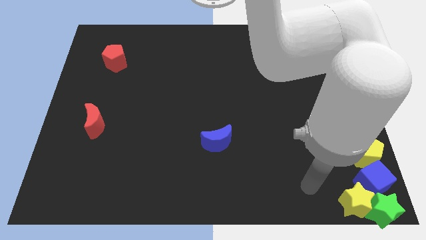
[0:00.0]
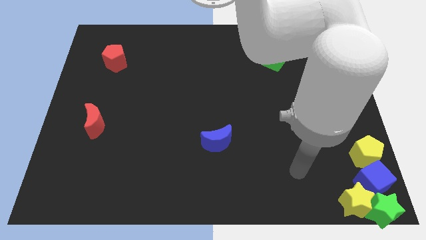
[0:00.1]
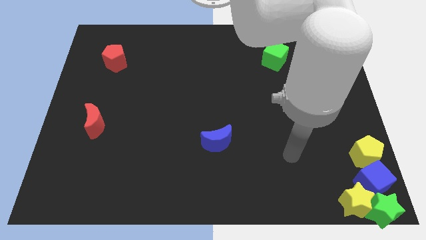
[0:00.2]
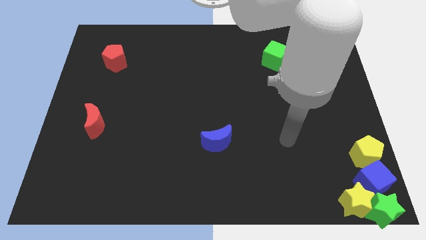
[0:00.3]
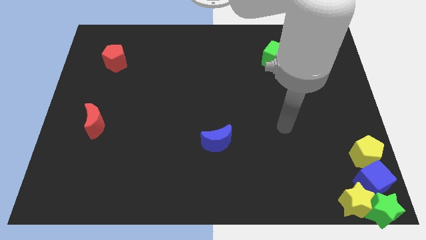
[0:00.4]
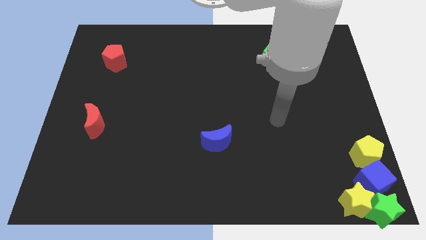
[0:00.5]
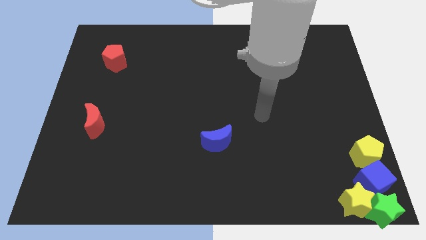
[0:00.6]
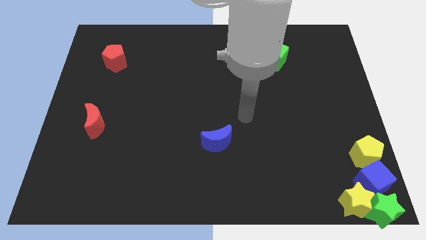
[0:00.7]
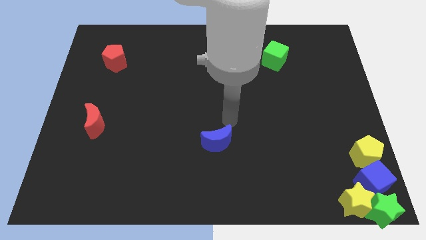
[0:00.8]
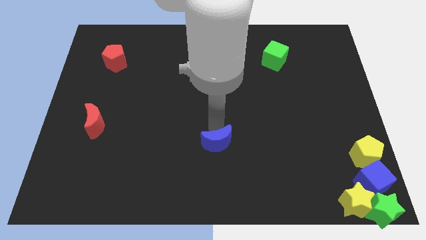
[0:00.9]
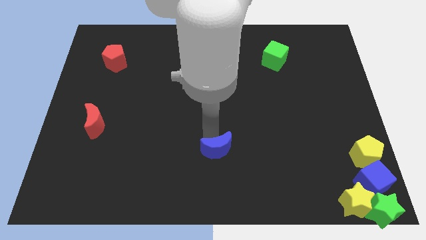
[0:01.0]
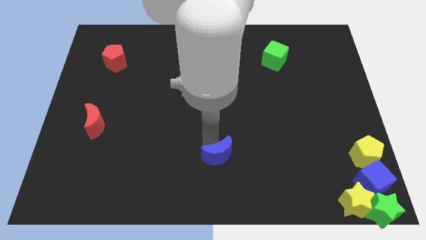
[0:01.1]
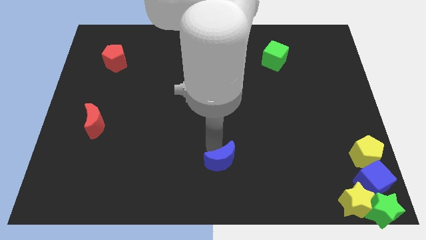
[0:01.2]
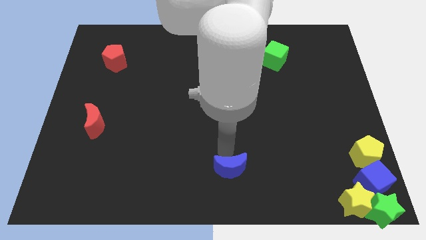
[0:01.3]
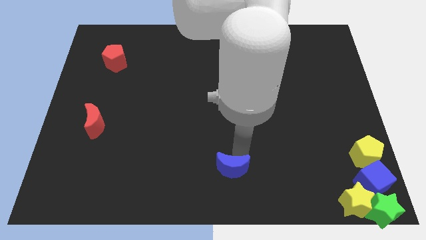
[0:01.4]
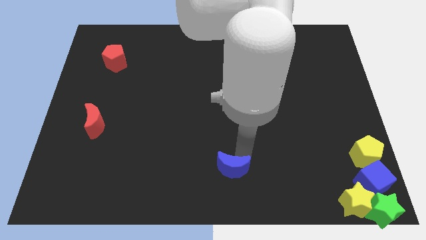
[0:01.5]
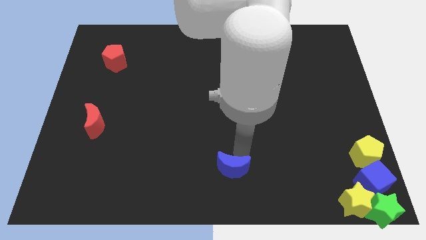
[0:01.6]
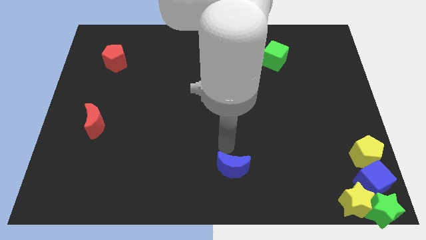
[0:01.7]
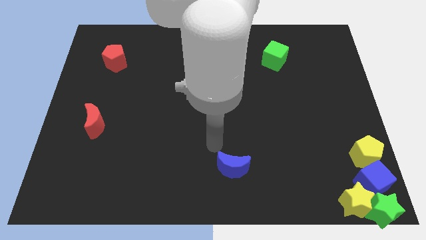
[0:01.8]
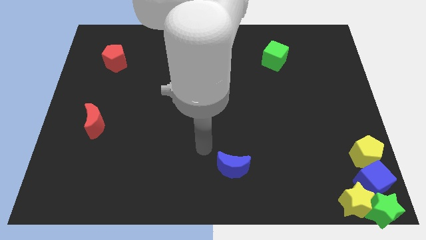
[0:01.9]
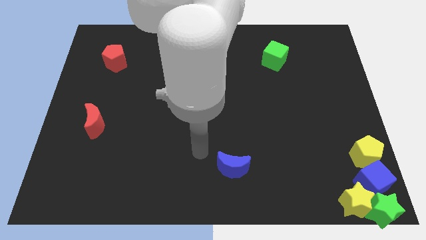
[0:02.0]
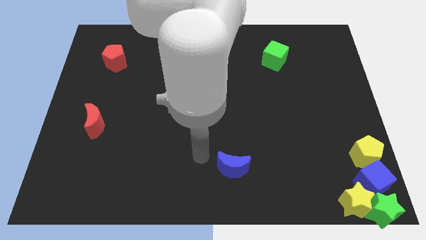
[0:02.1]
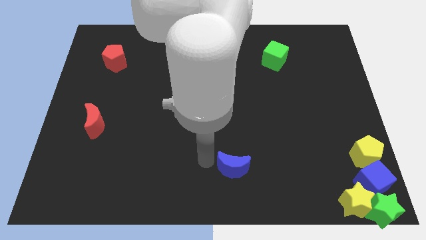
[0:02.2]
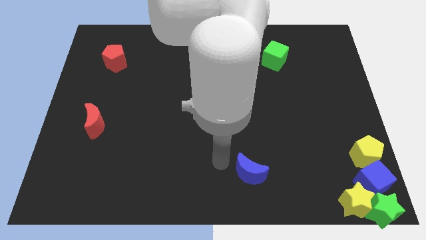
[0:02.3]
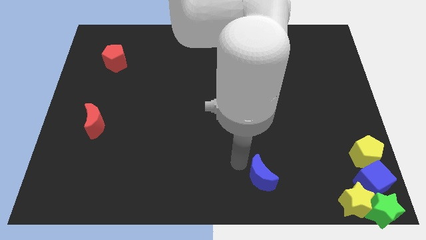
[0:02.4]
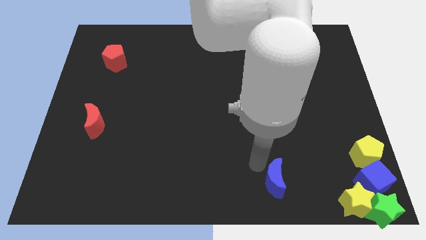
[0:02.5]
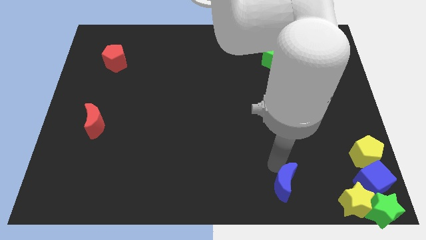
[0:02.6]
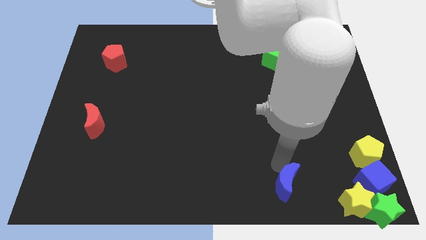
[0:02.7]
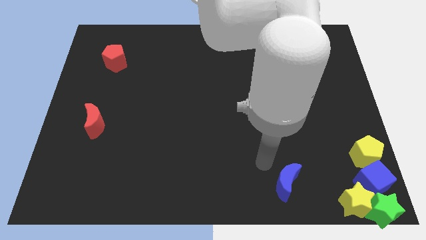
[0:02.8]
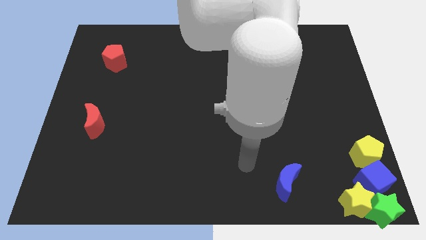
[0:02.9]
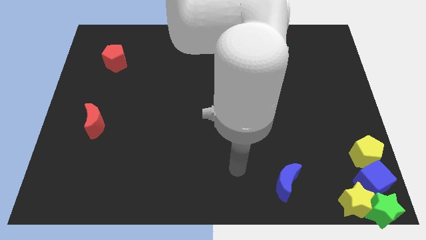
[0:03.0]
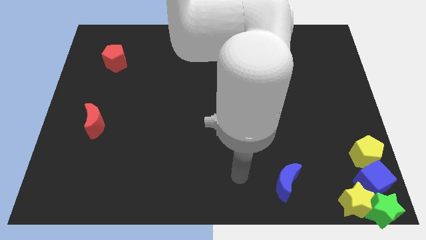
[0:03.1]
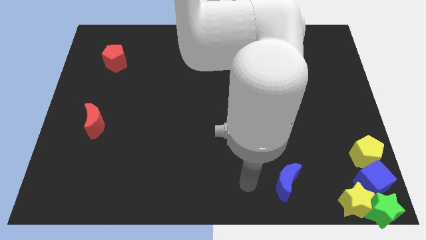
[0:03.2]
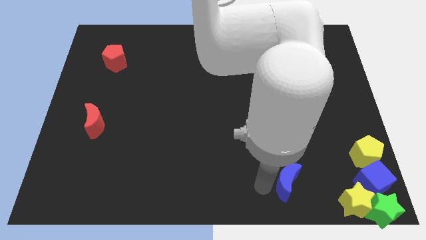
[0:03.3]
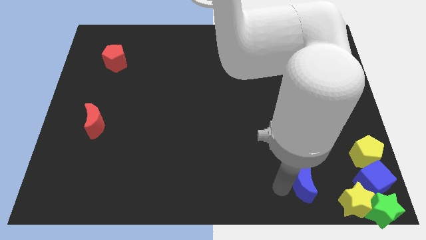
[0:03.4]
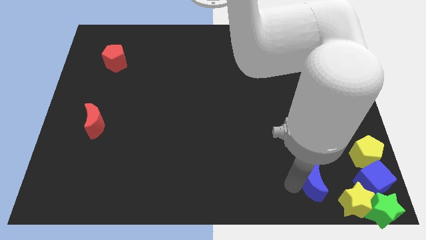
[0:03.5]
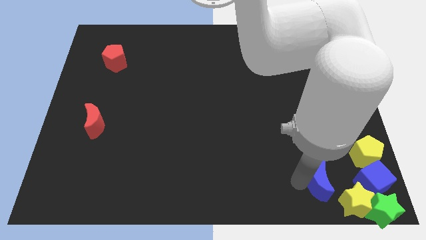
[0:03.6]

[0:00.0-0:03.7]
put the blue moon to the left side of the blue cube

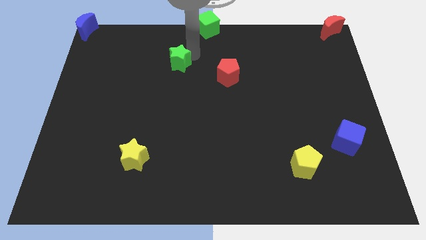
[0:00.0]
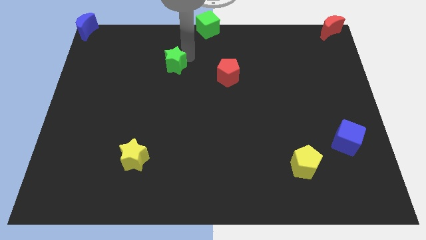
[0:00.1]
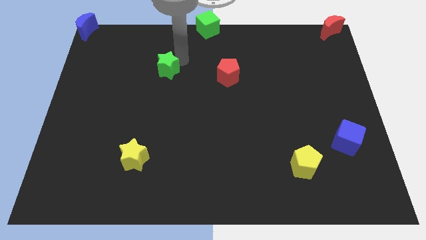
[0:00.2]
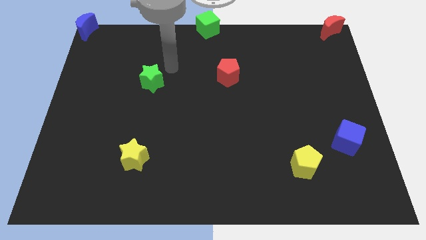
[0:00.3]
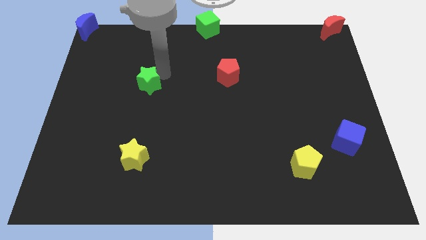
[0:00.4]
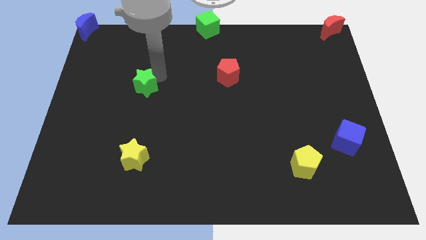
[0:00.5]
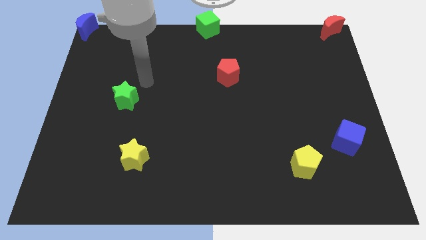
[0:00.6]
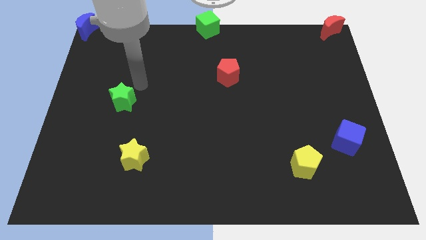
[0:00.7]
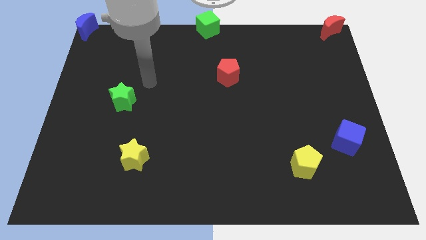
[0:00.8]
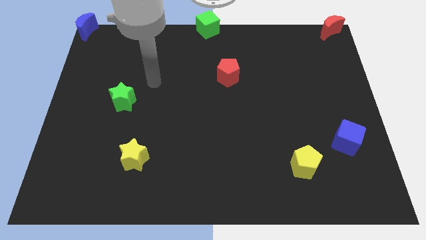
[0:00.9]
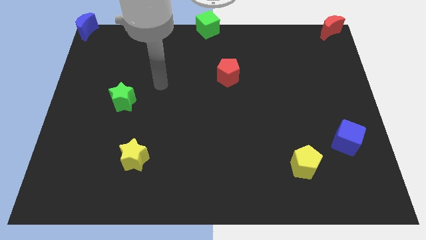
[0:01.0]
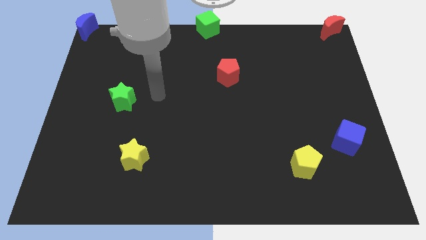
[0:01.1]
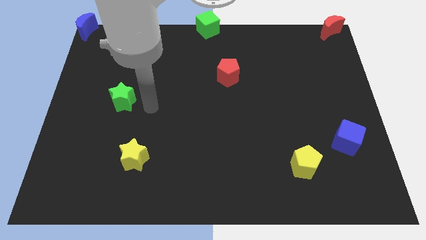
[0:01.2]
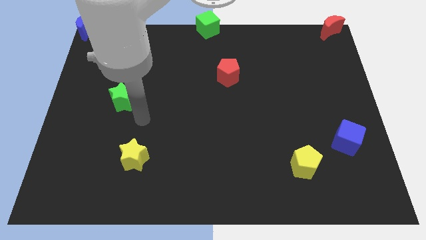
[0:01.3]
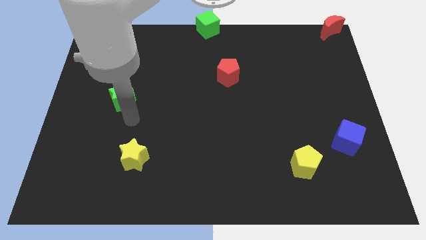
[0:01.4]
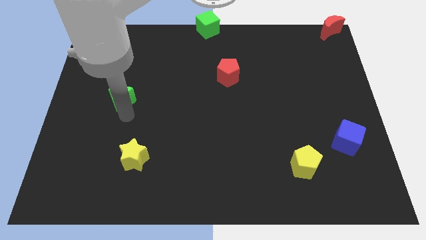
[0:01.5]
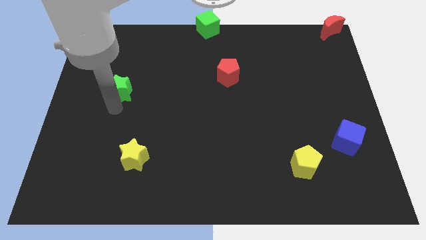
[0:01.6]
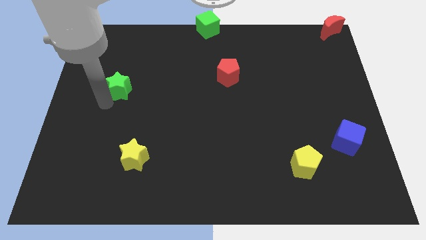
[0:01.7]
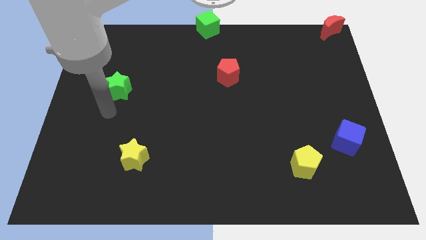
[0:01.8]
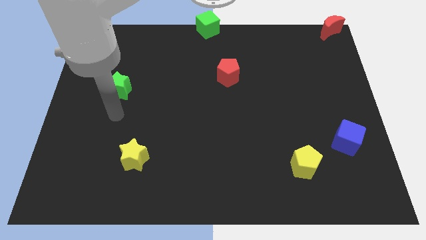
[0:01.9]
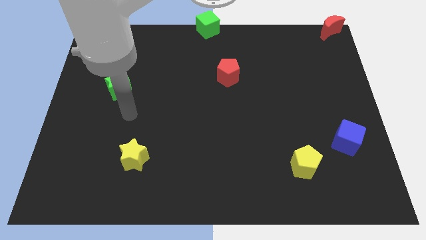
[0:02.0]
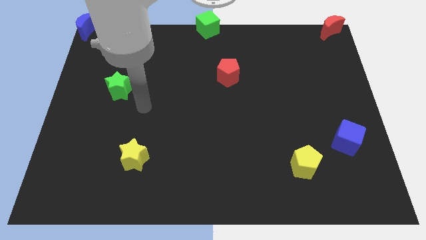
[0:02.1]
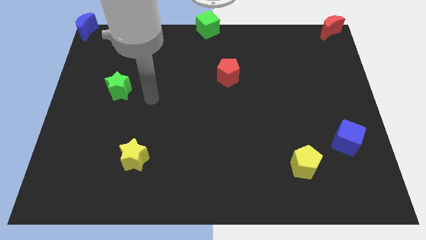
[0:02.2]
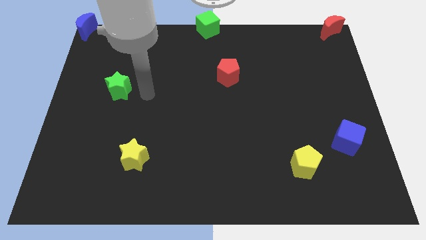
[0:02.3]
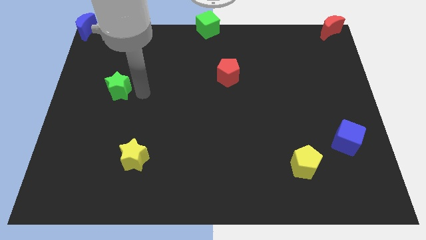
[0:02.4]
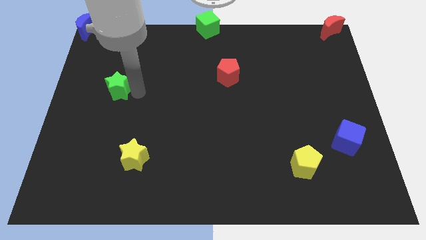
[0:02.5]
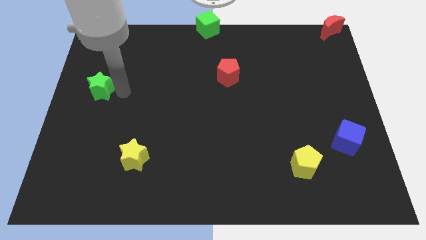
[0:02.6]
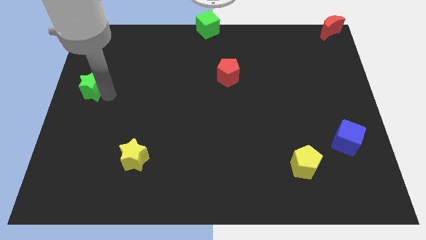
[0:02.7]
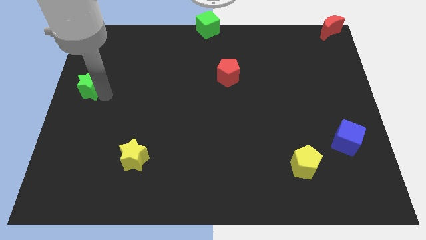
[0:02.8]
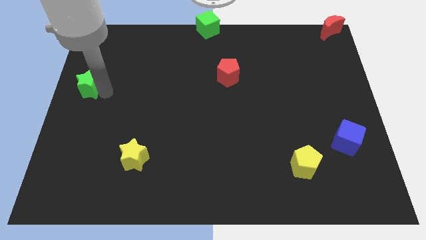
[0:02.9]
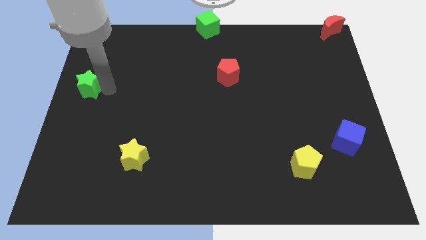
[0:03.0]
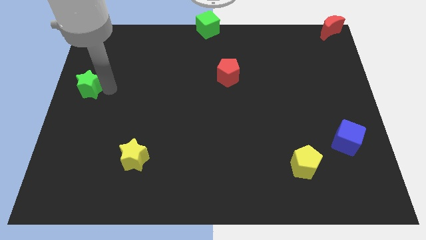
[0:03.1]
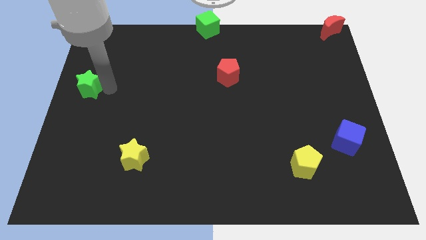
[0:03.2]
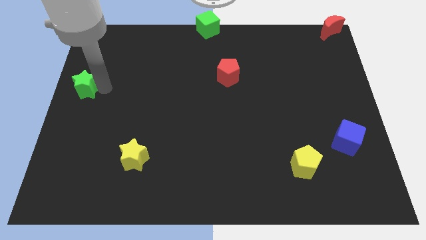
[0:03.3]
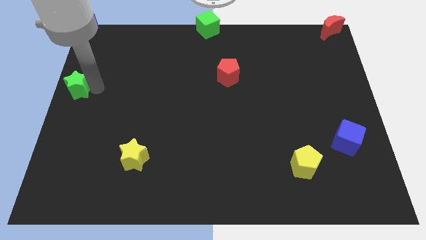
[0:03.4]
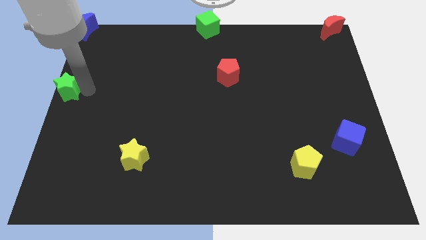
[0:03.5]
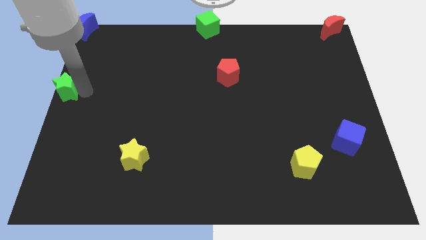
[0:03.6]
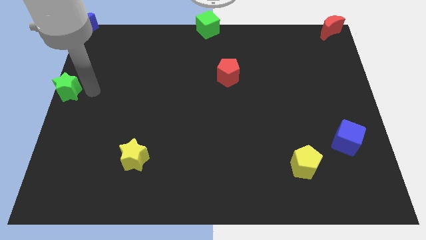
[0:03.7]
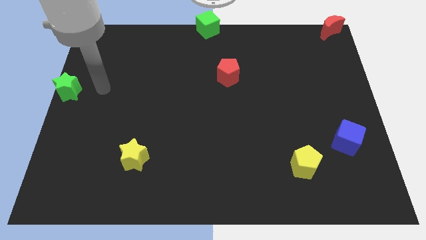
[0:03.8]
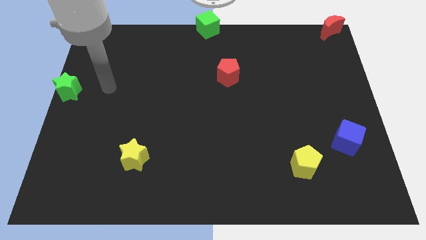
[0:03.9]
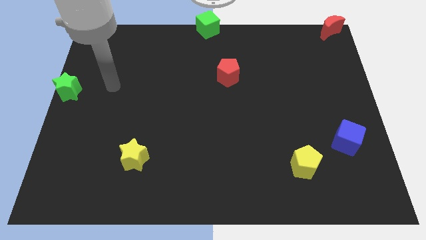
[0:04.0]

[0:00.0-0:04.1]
move the green star to the left center of the board

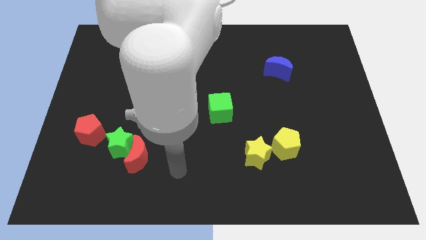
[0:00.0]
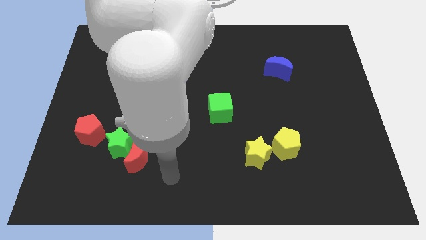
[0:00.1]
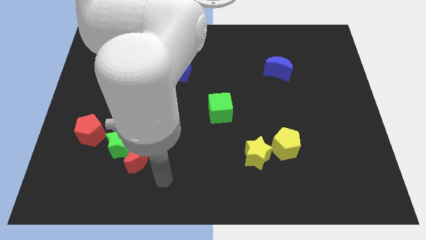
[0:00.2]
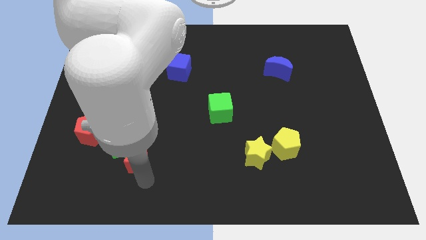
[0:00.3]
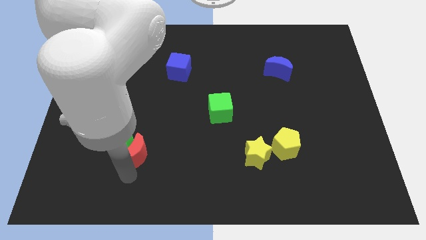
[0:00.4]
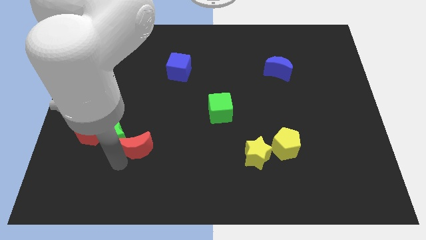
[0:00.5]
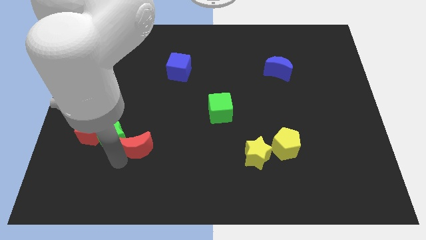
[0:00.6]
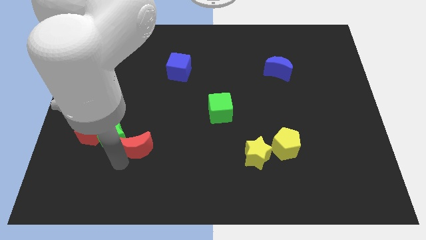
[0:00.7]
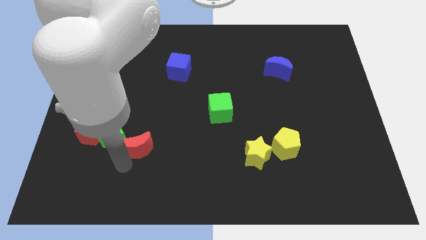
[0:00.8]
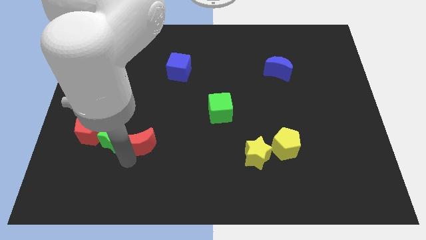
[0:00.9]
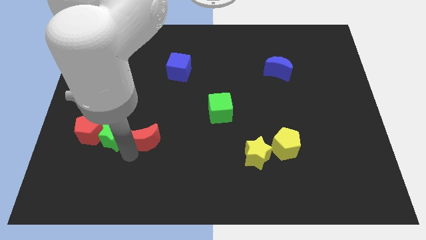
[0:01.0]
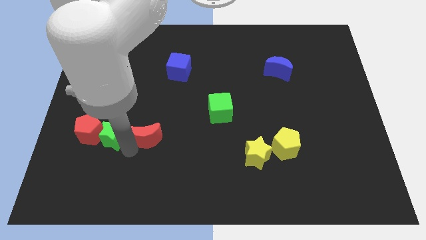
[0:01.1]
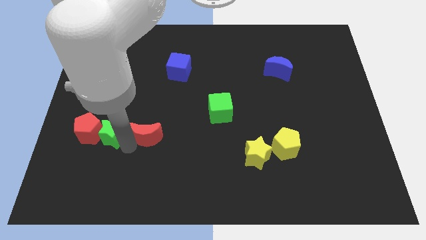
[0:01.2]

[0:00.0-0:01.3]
push the red moon towards the right side of the green star
